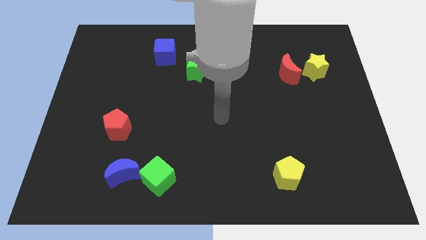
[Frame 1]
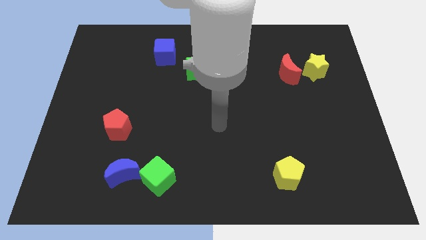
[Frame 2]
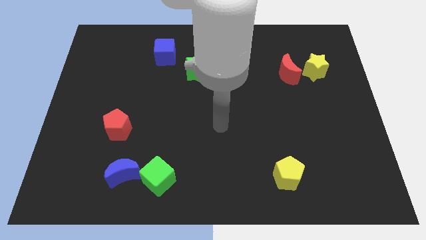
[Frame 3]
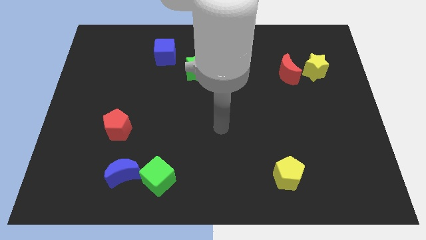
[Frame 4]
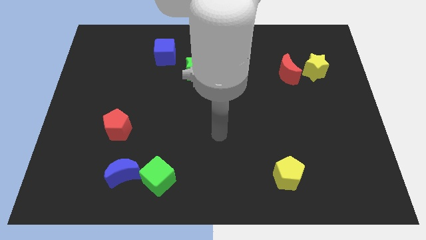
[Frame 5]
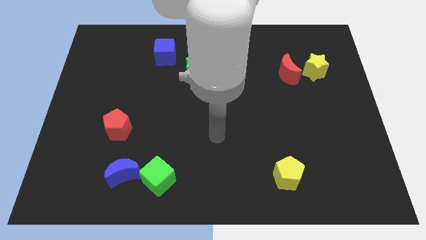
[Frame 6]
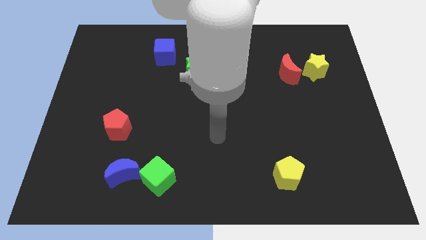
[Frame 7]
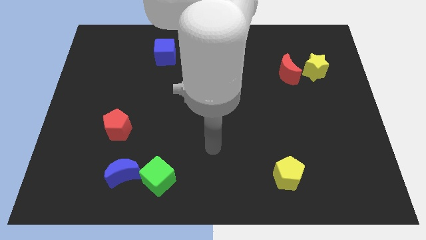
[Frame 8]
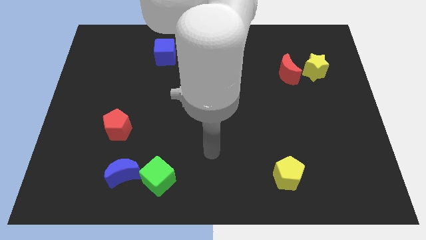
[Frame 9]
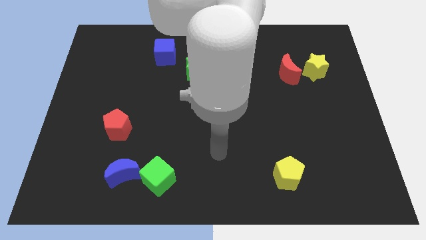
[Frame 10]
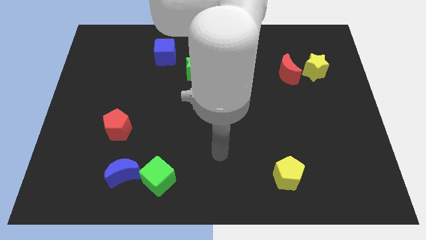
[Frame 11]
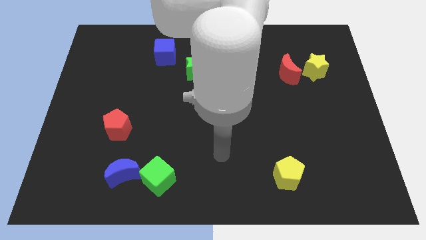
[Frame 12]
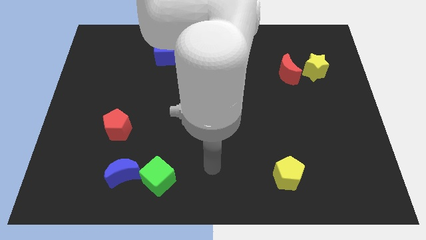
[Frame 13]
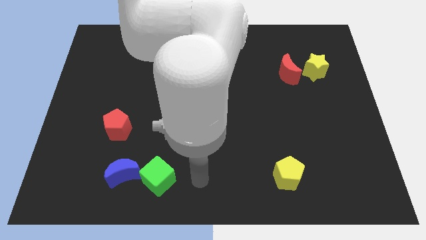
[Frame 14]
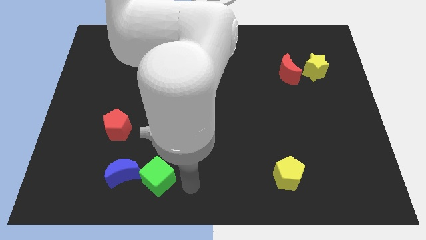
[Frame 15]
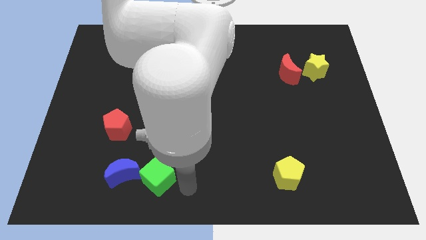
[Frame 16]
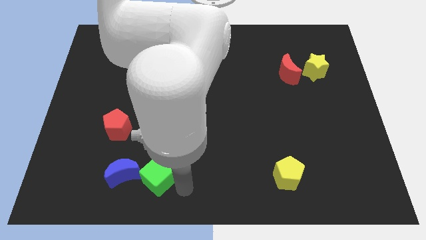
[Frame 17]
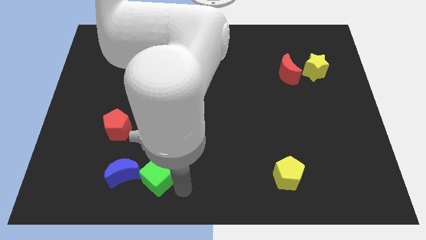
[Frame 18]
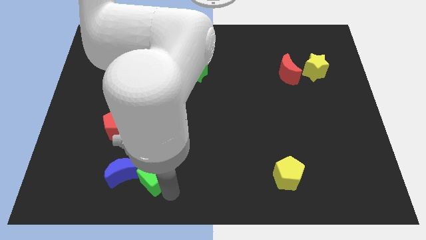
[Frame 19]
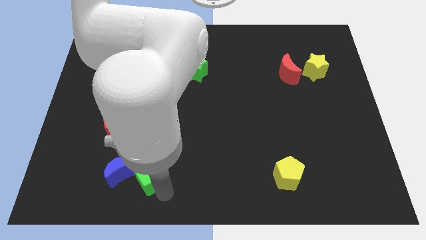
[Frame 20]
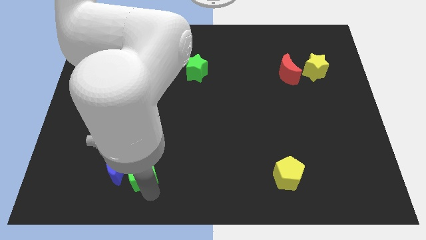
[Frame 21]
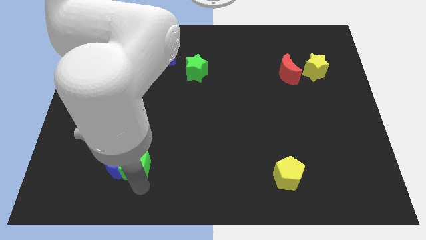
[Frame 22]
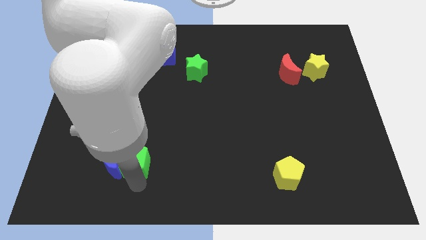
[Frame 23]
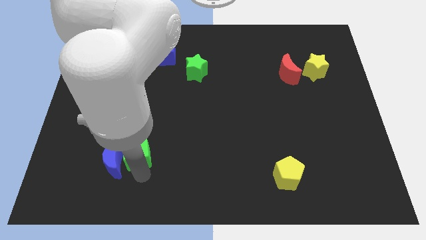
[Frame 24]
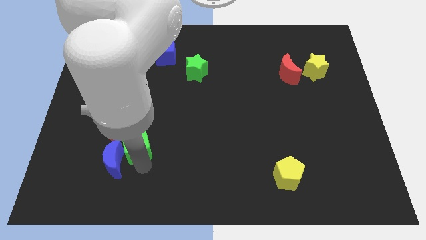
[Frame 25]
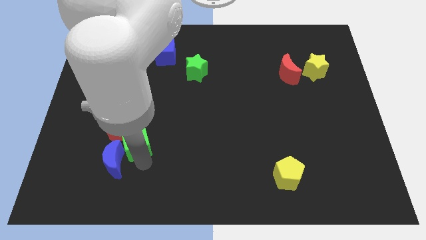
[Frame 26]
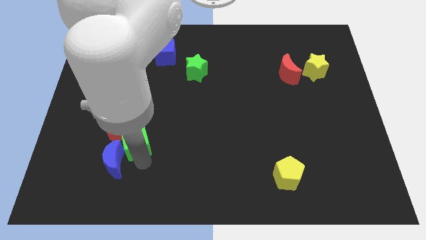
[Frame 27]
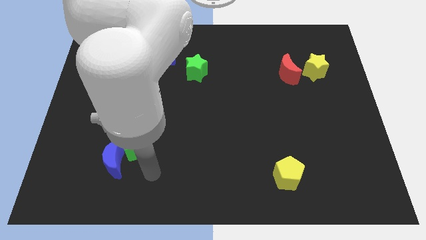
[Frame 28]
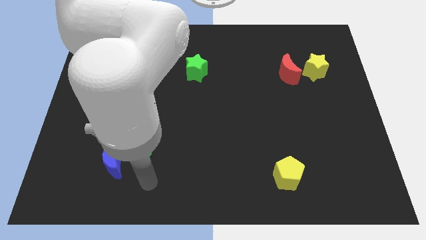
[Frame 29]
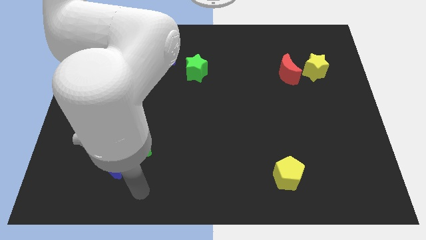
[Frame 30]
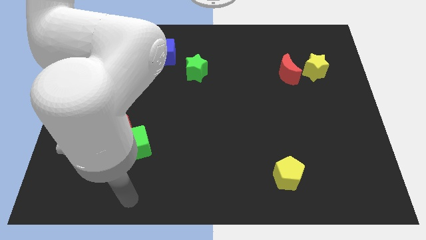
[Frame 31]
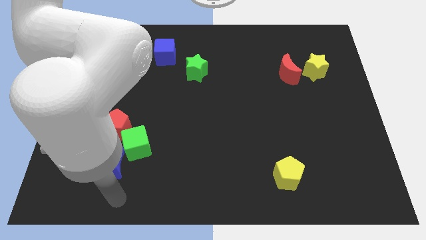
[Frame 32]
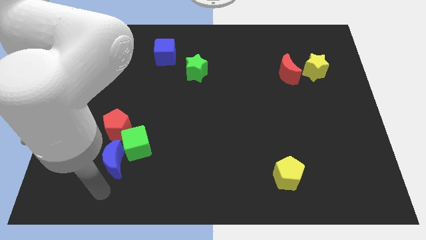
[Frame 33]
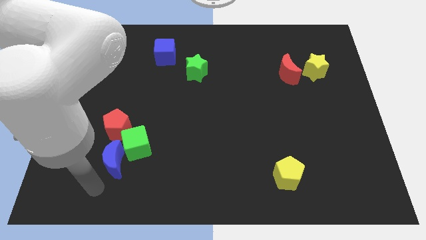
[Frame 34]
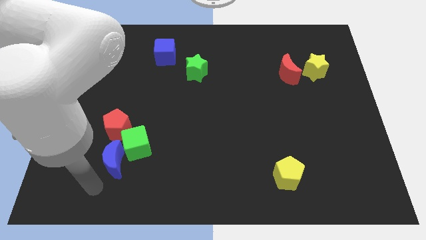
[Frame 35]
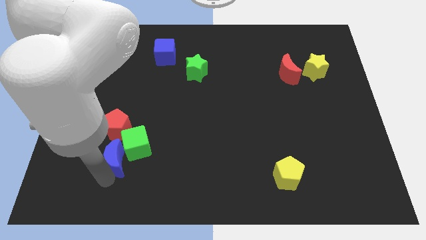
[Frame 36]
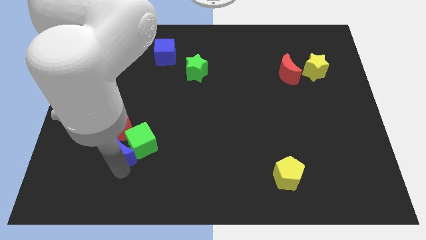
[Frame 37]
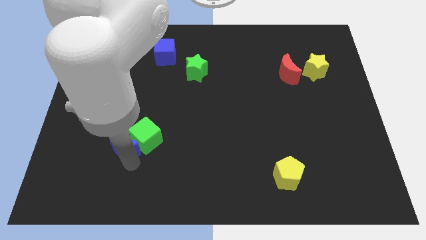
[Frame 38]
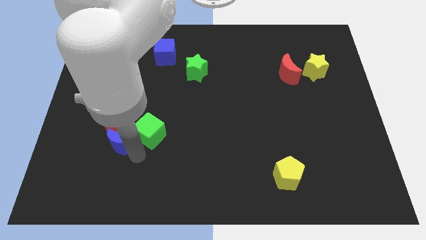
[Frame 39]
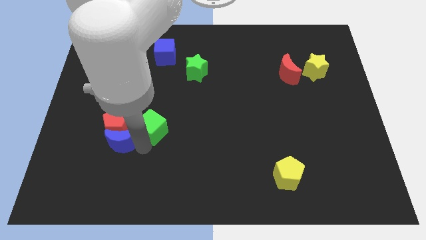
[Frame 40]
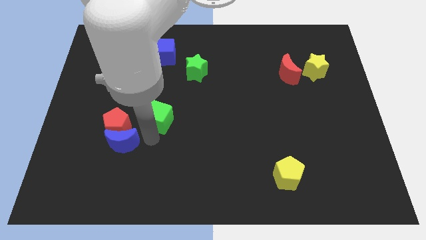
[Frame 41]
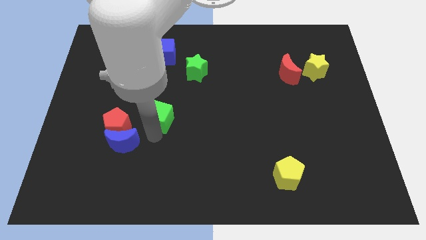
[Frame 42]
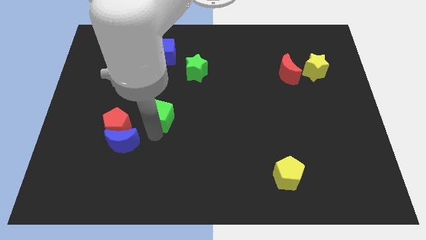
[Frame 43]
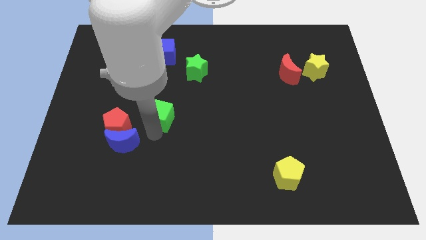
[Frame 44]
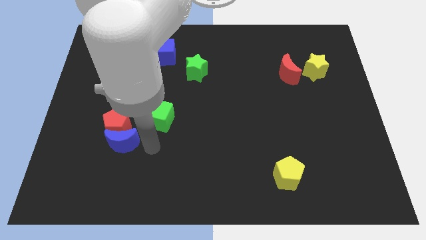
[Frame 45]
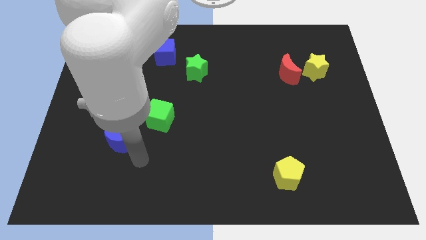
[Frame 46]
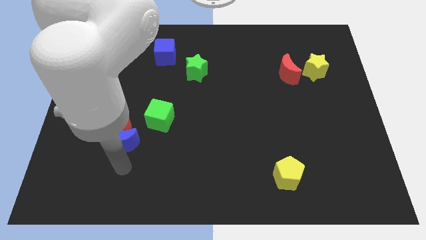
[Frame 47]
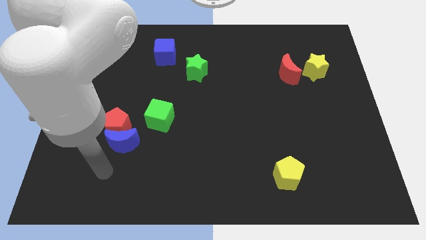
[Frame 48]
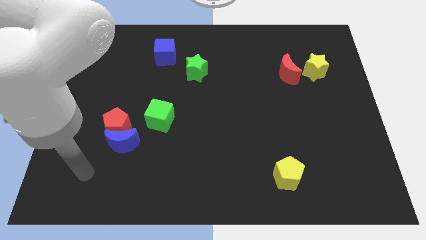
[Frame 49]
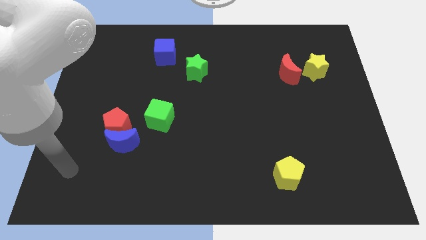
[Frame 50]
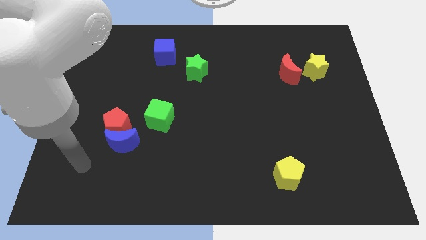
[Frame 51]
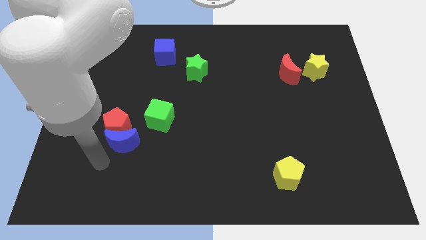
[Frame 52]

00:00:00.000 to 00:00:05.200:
move green cube to the bottom of blue cube

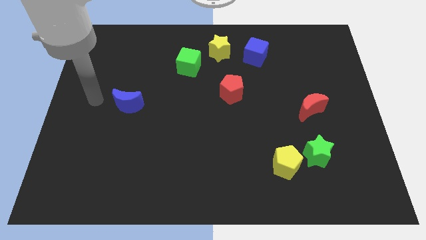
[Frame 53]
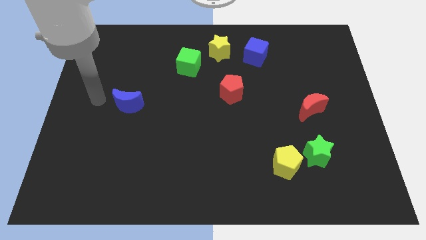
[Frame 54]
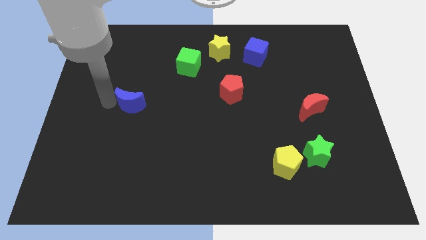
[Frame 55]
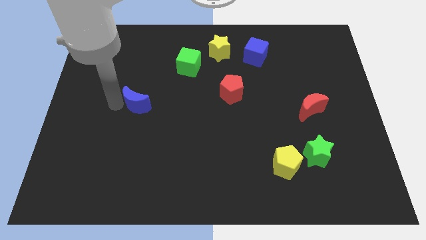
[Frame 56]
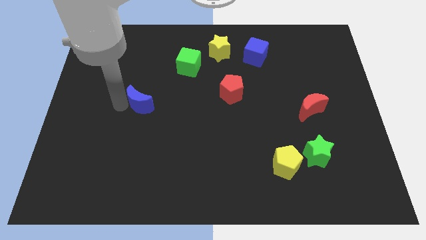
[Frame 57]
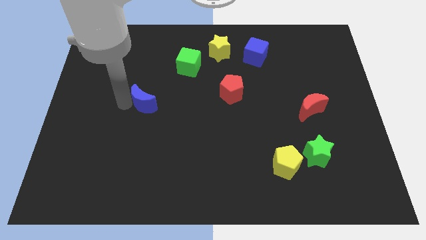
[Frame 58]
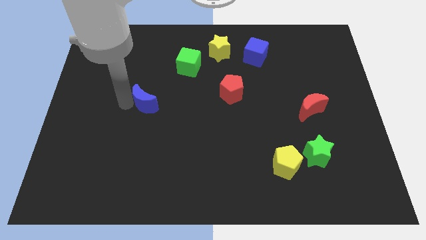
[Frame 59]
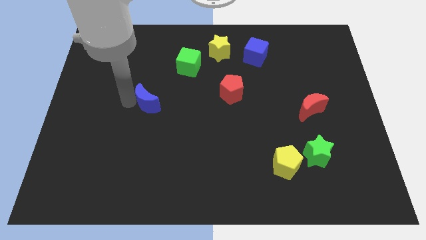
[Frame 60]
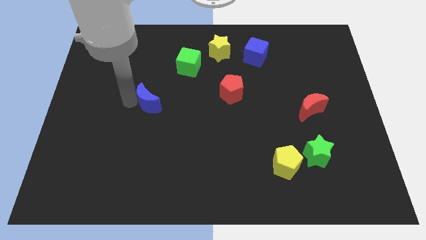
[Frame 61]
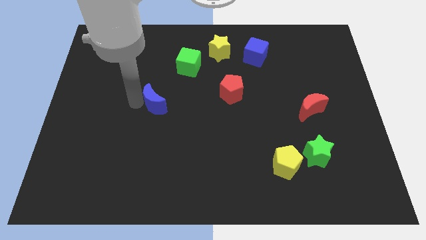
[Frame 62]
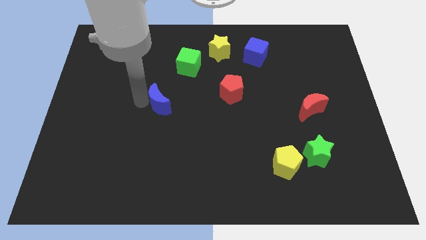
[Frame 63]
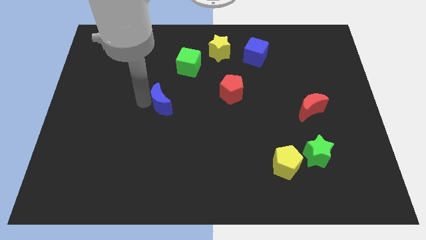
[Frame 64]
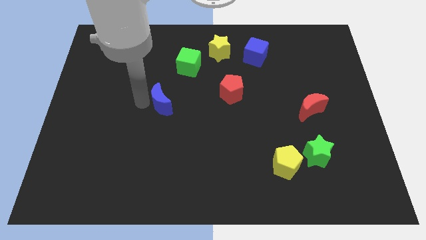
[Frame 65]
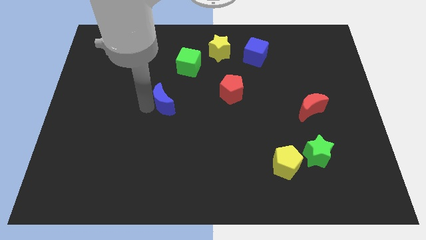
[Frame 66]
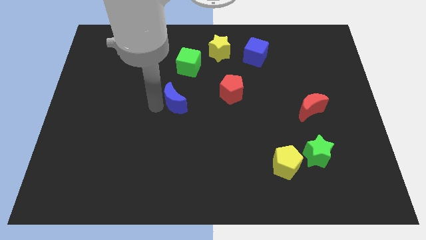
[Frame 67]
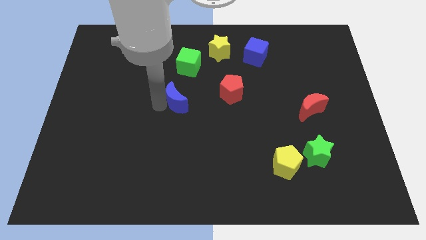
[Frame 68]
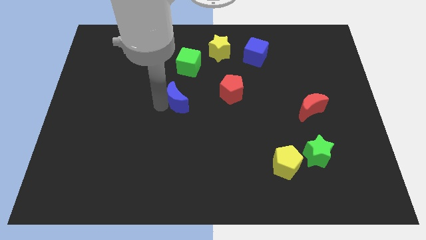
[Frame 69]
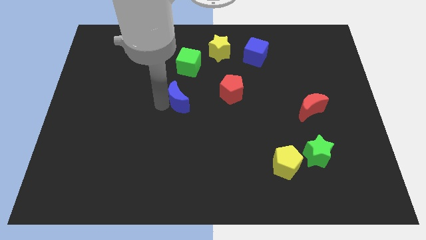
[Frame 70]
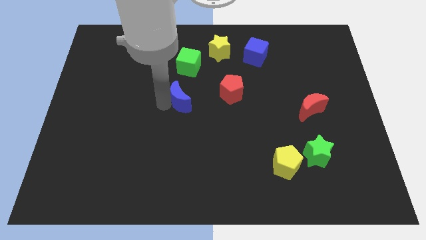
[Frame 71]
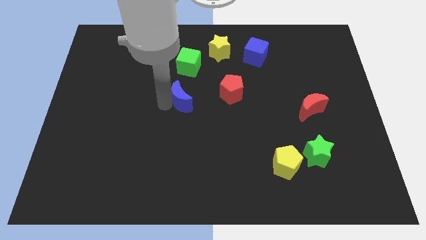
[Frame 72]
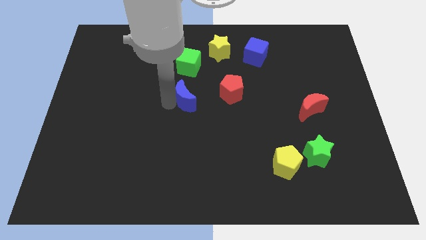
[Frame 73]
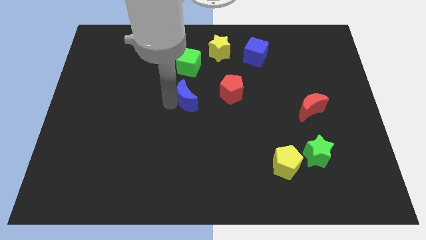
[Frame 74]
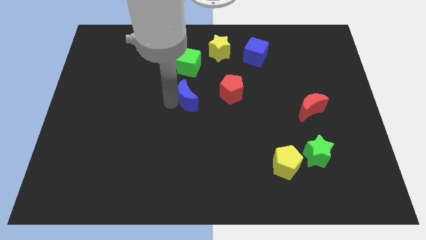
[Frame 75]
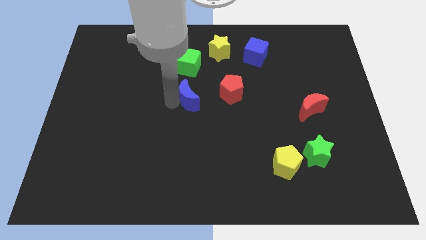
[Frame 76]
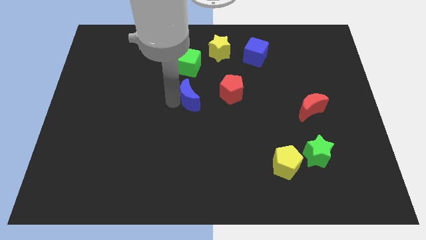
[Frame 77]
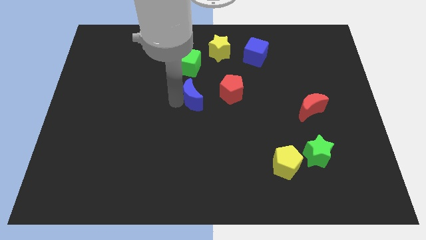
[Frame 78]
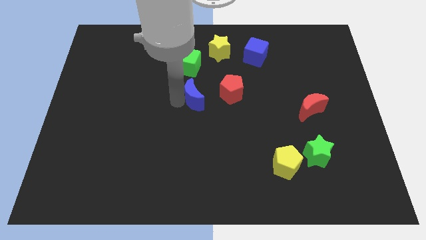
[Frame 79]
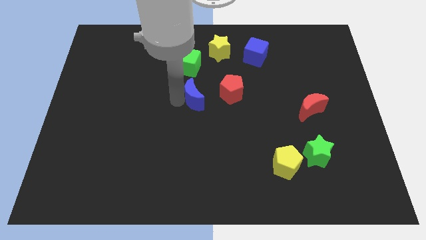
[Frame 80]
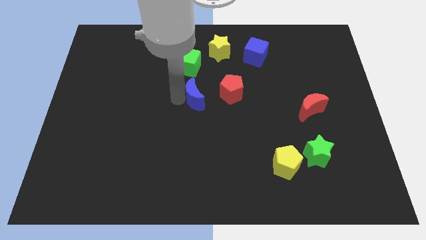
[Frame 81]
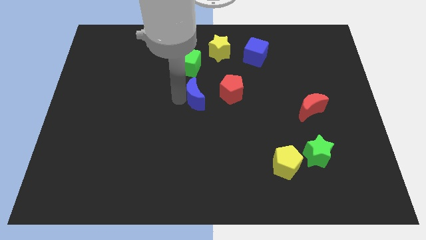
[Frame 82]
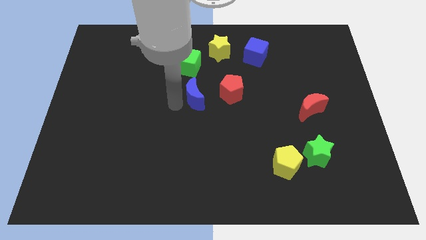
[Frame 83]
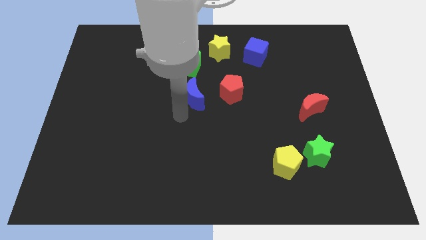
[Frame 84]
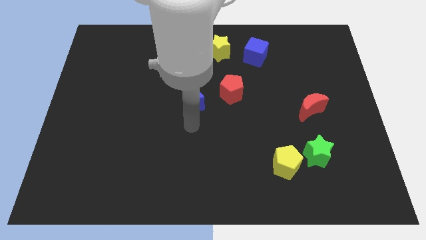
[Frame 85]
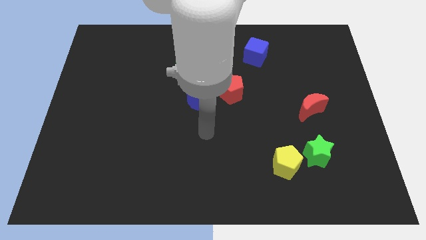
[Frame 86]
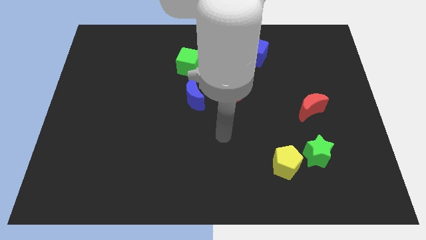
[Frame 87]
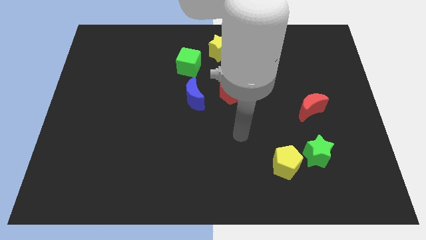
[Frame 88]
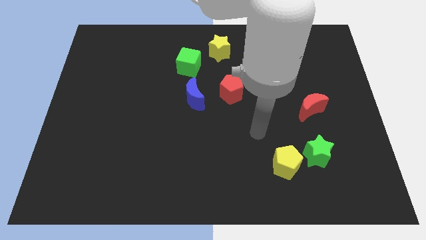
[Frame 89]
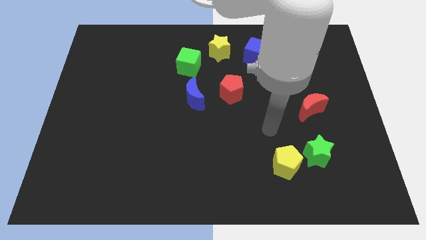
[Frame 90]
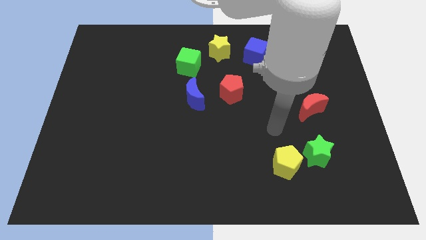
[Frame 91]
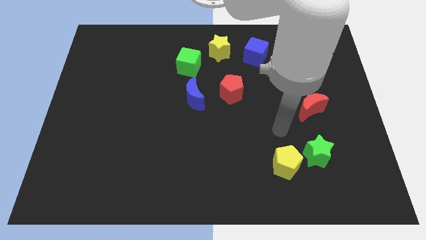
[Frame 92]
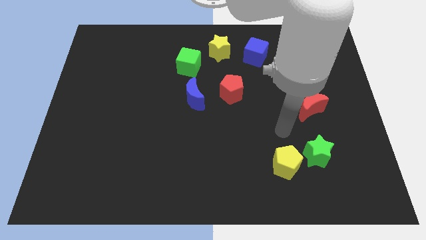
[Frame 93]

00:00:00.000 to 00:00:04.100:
push blue moon to the left of red pentagon
